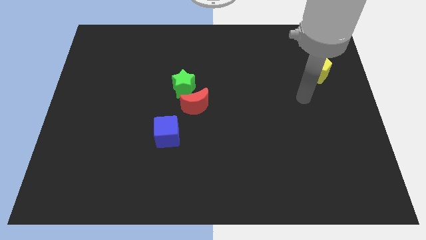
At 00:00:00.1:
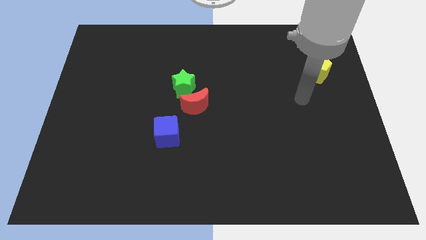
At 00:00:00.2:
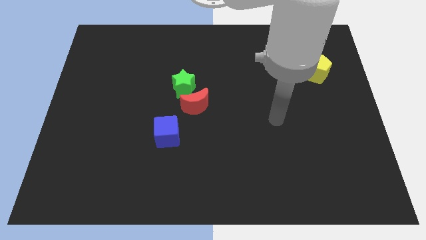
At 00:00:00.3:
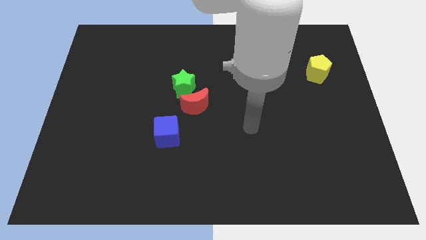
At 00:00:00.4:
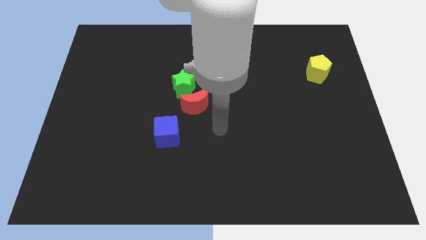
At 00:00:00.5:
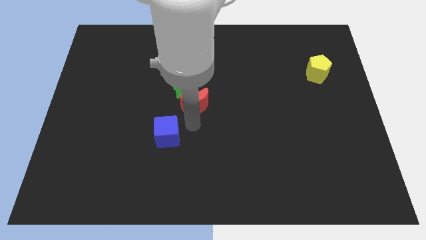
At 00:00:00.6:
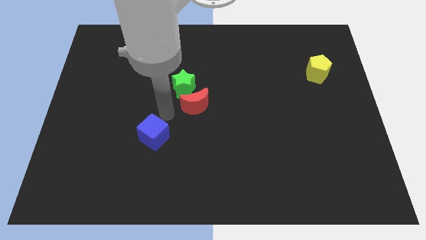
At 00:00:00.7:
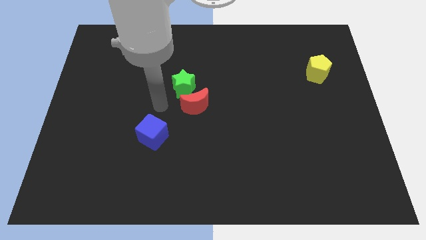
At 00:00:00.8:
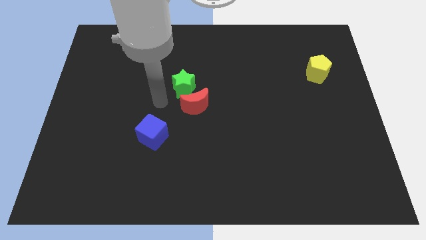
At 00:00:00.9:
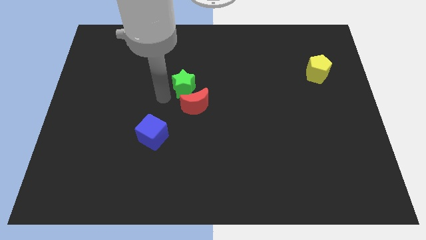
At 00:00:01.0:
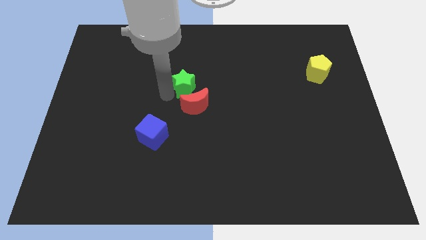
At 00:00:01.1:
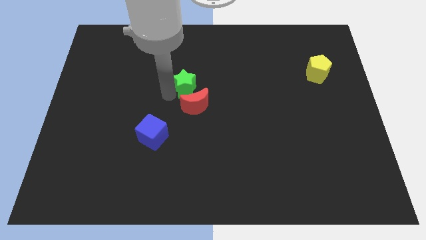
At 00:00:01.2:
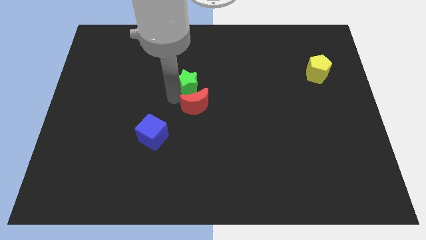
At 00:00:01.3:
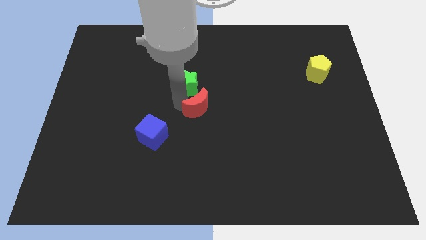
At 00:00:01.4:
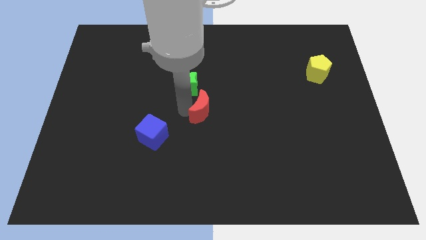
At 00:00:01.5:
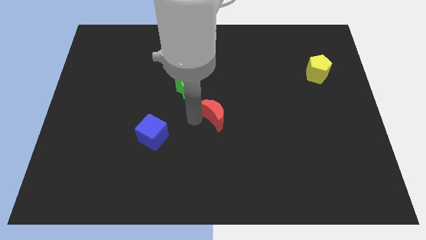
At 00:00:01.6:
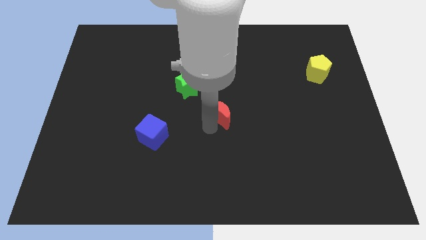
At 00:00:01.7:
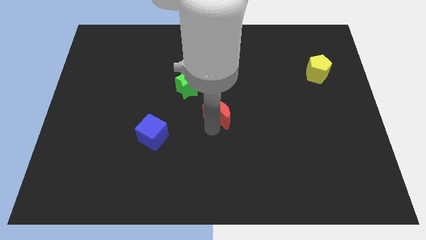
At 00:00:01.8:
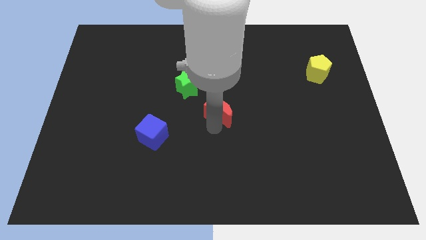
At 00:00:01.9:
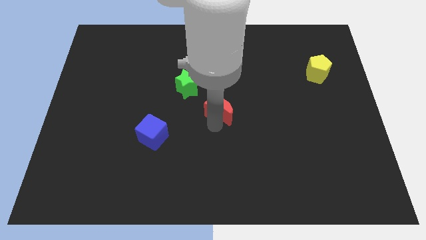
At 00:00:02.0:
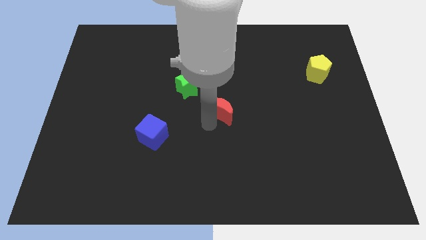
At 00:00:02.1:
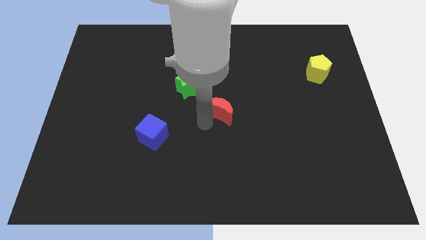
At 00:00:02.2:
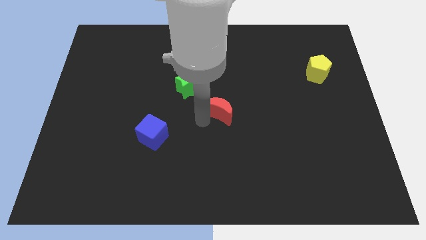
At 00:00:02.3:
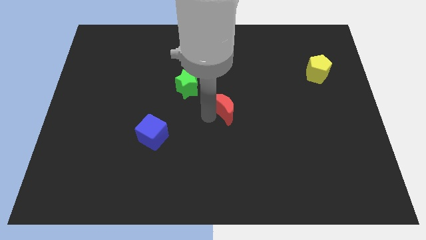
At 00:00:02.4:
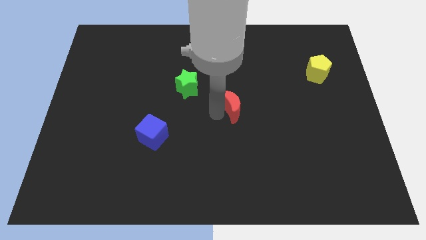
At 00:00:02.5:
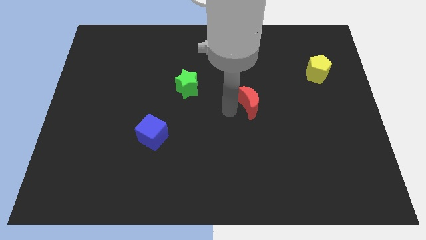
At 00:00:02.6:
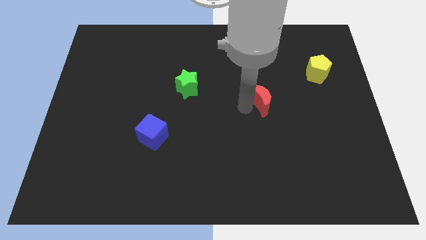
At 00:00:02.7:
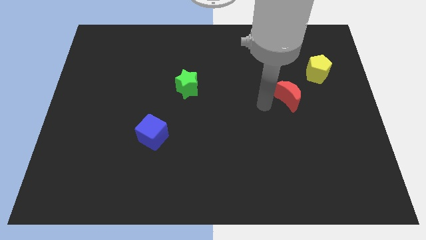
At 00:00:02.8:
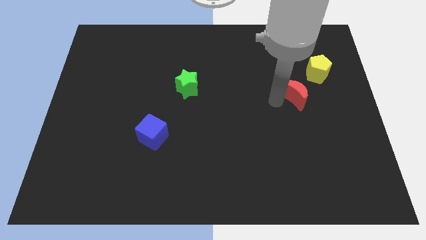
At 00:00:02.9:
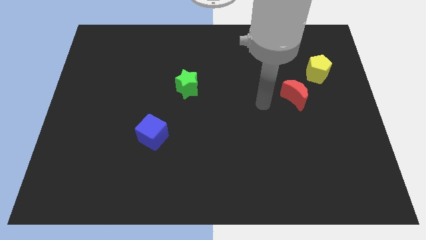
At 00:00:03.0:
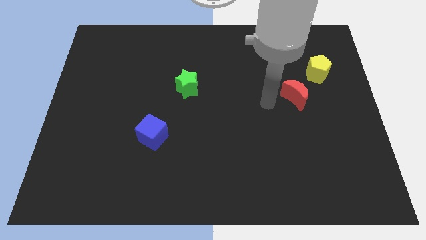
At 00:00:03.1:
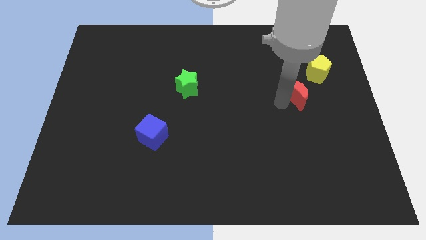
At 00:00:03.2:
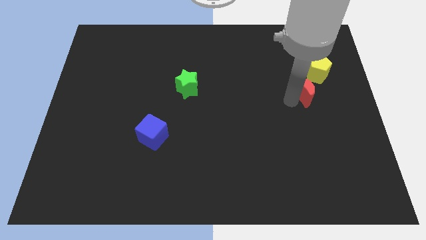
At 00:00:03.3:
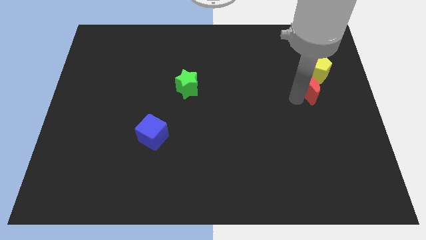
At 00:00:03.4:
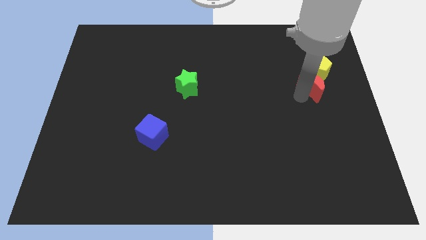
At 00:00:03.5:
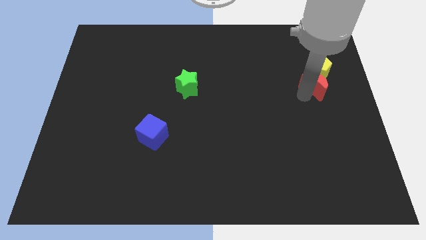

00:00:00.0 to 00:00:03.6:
put the red moon to the yellow pentagon

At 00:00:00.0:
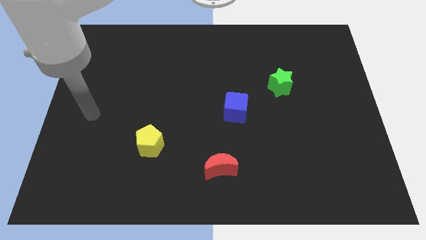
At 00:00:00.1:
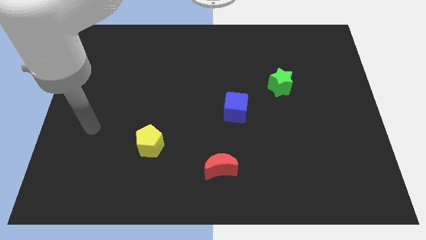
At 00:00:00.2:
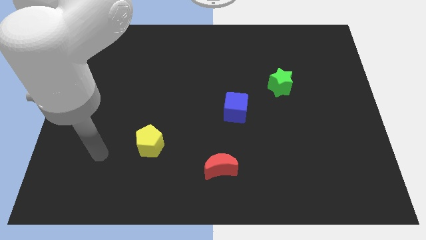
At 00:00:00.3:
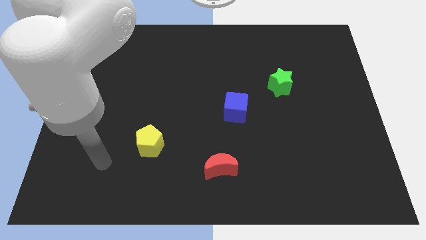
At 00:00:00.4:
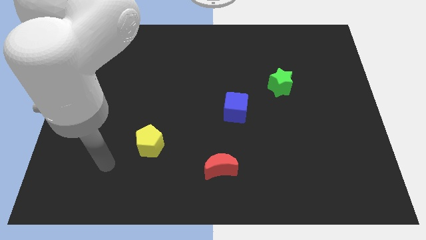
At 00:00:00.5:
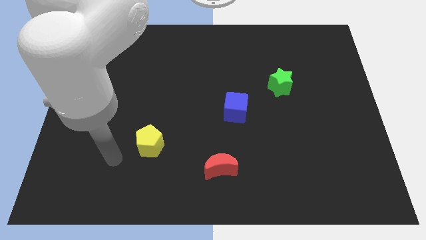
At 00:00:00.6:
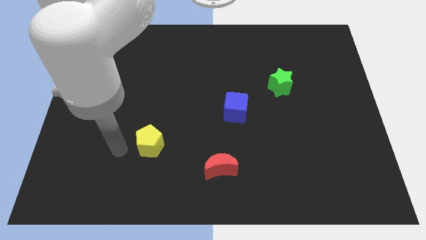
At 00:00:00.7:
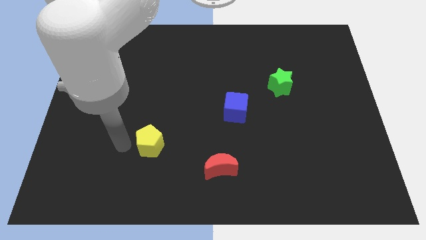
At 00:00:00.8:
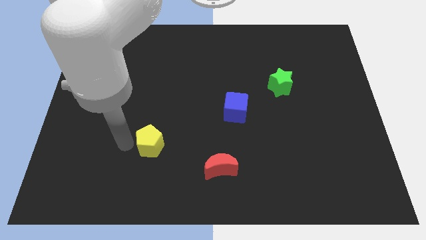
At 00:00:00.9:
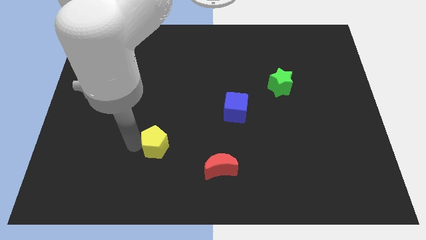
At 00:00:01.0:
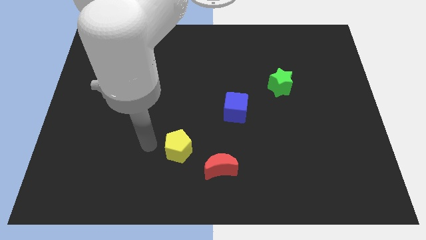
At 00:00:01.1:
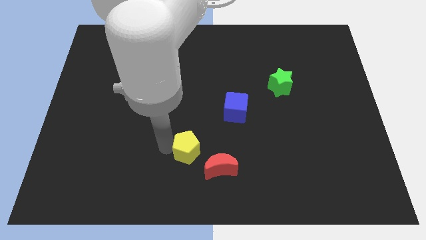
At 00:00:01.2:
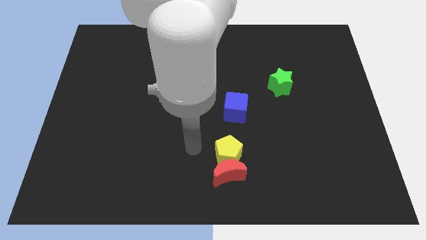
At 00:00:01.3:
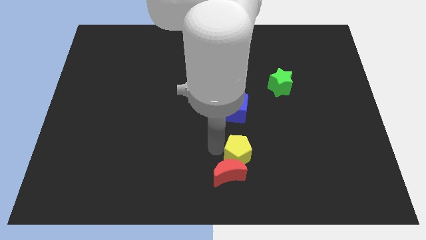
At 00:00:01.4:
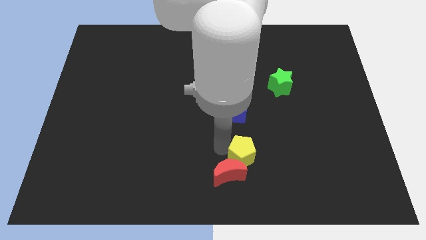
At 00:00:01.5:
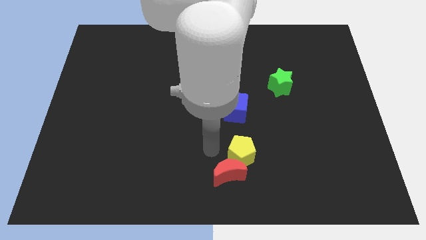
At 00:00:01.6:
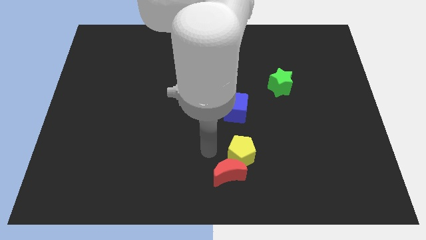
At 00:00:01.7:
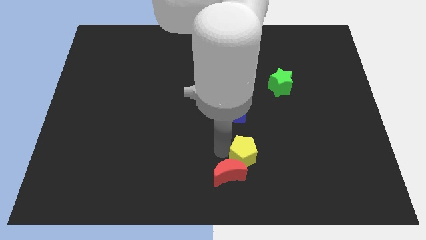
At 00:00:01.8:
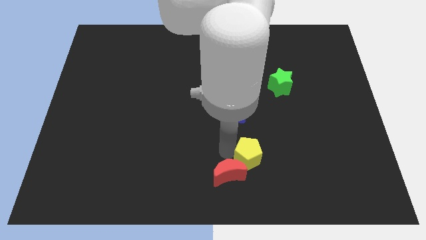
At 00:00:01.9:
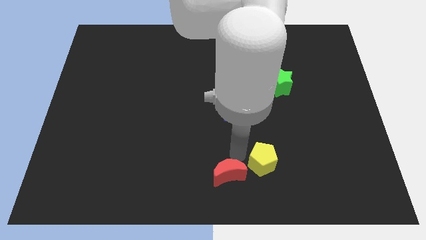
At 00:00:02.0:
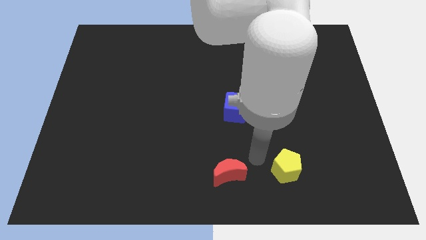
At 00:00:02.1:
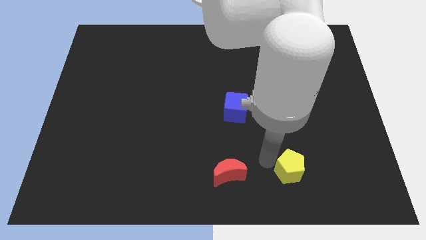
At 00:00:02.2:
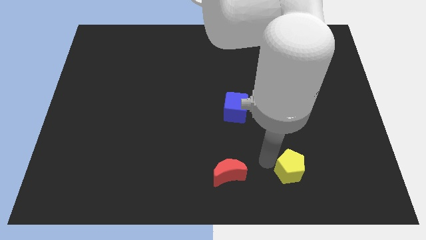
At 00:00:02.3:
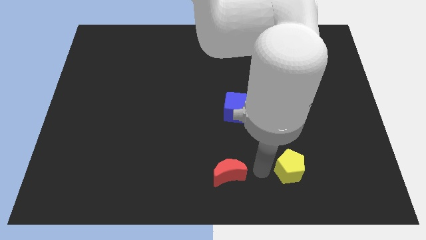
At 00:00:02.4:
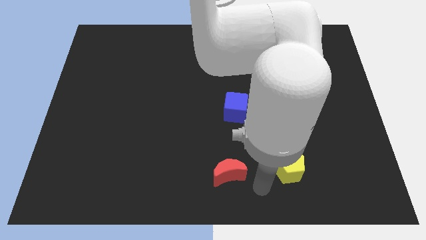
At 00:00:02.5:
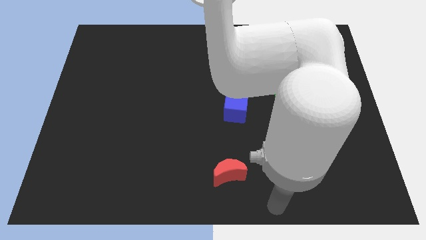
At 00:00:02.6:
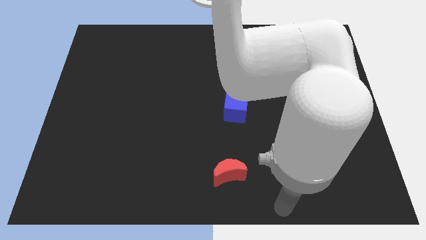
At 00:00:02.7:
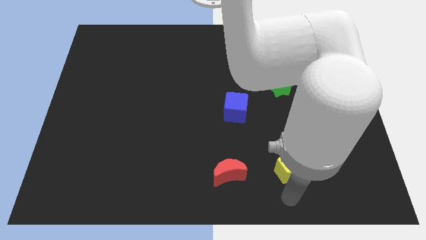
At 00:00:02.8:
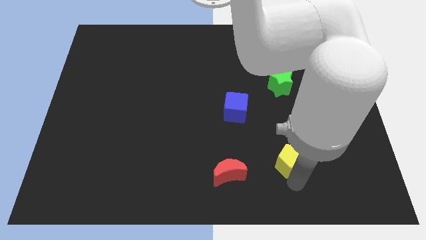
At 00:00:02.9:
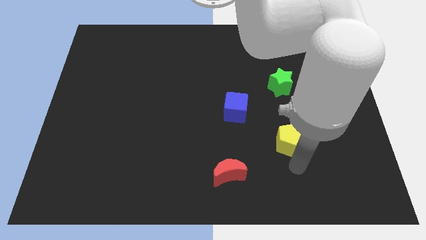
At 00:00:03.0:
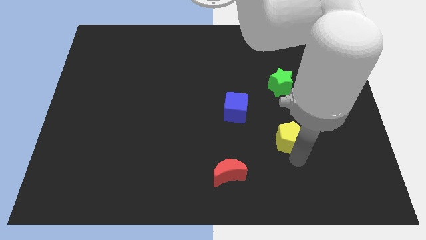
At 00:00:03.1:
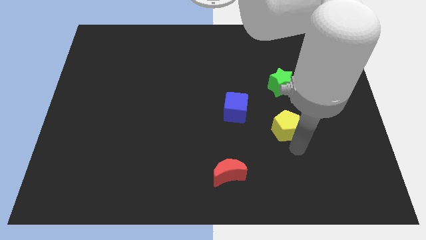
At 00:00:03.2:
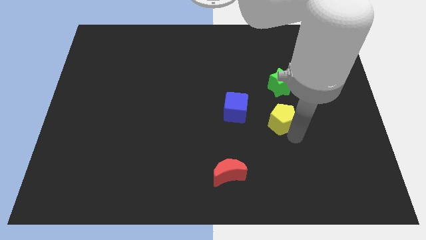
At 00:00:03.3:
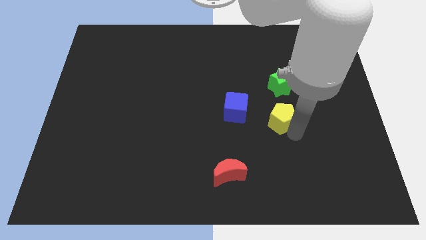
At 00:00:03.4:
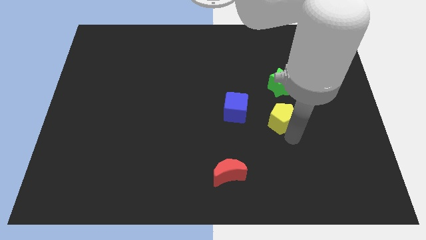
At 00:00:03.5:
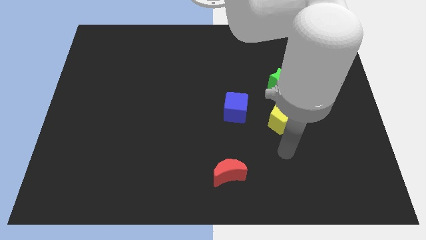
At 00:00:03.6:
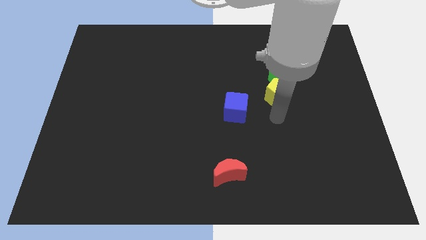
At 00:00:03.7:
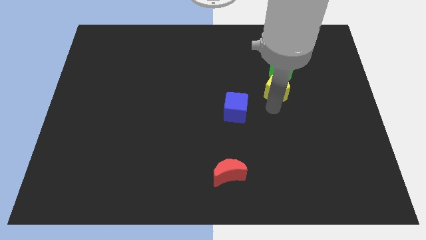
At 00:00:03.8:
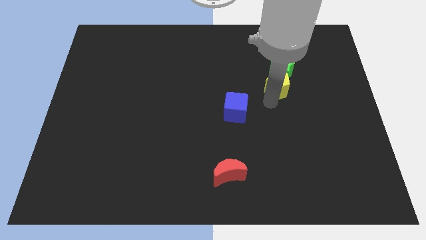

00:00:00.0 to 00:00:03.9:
slide the yellow pentagon to the green star

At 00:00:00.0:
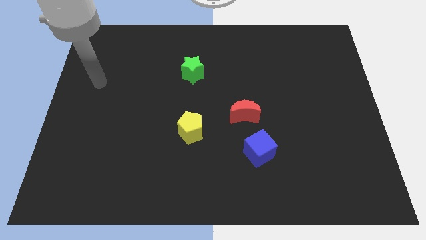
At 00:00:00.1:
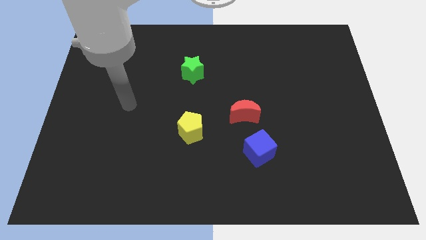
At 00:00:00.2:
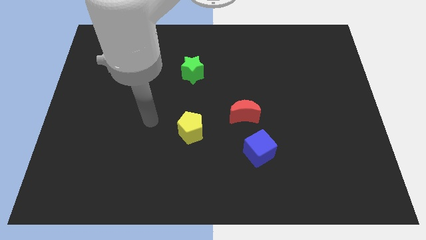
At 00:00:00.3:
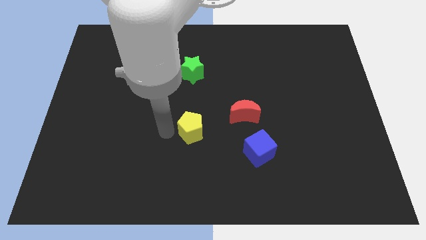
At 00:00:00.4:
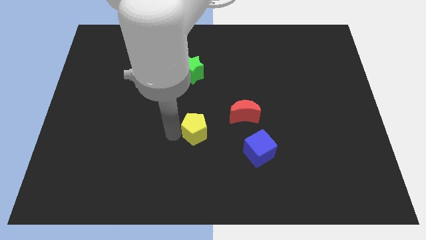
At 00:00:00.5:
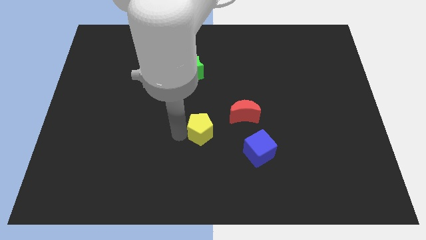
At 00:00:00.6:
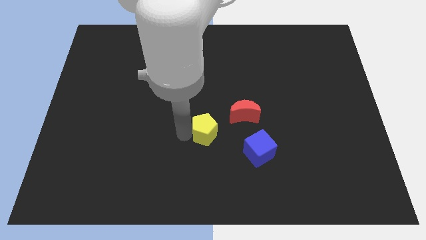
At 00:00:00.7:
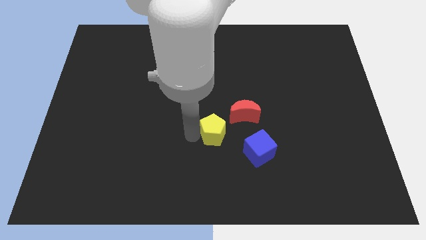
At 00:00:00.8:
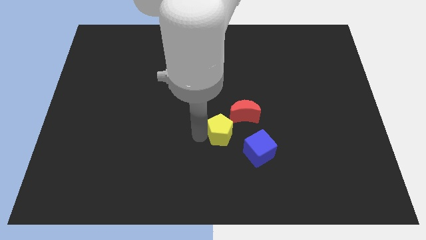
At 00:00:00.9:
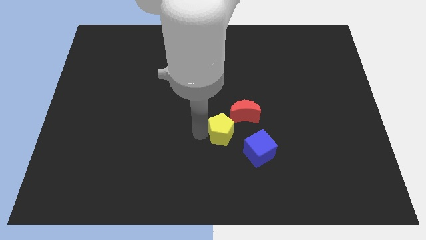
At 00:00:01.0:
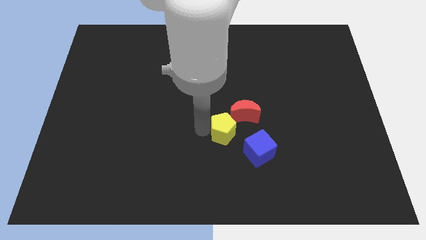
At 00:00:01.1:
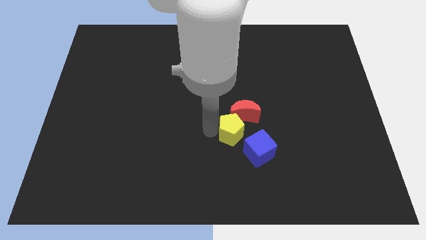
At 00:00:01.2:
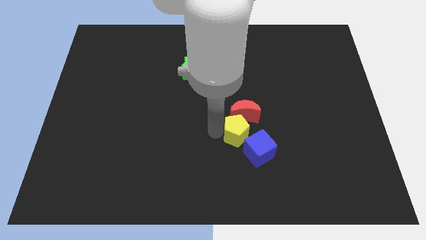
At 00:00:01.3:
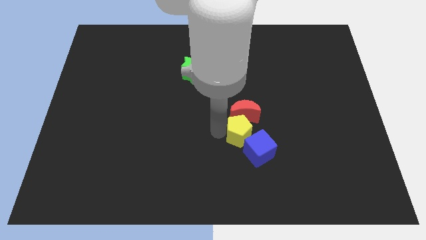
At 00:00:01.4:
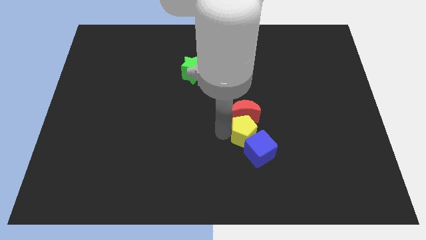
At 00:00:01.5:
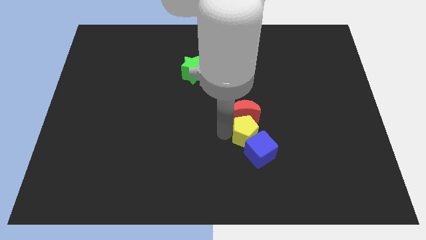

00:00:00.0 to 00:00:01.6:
push the pentagon close to the blue block
